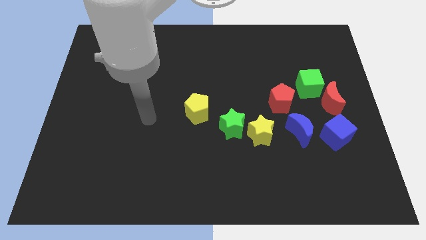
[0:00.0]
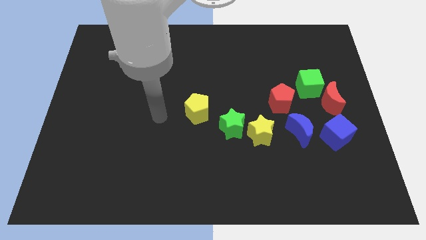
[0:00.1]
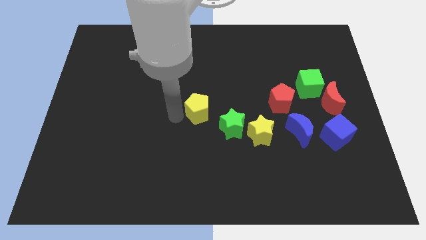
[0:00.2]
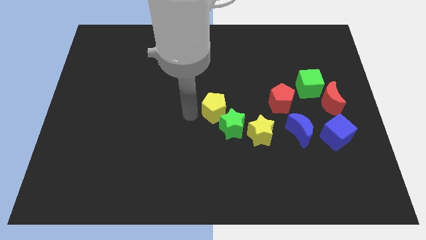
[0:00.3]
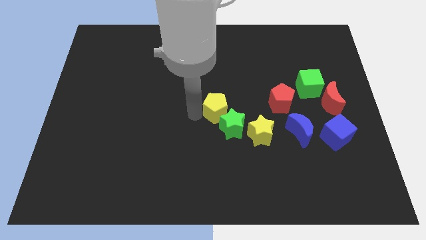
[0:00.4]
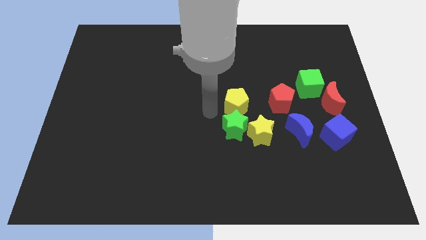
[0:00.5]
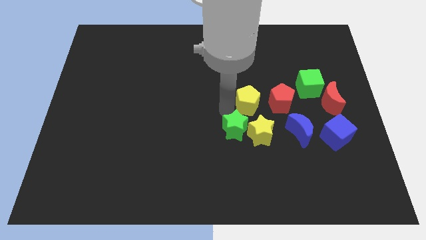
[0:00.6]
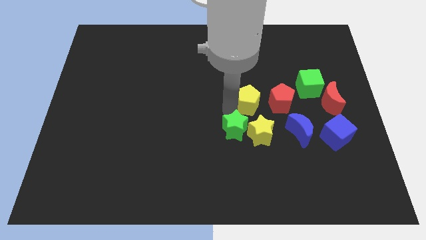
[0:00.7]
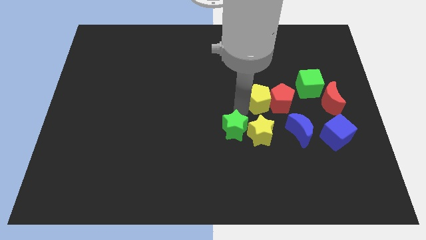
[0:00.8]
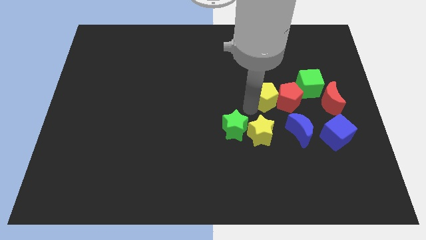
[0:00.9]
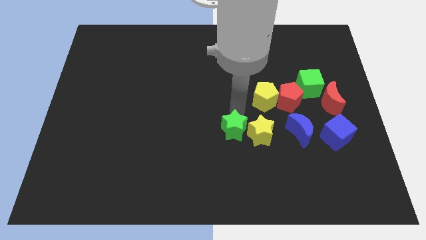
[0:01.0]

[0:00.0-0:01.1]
place the yellow pentagon into the red pentagon

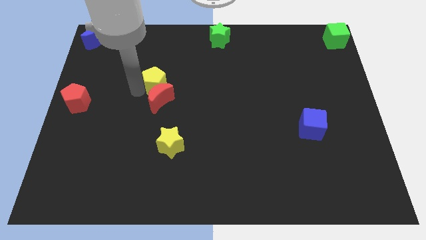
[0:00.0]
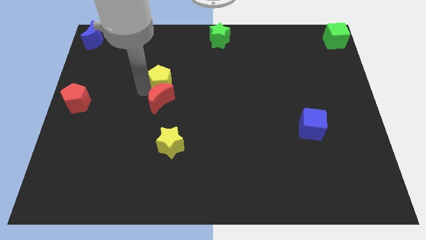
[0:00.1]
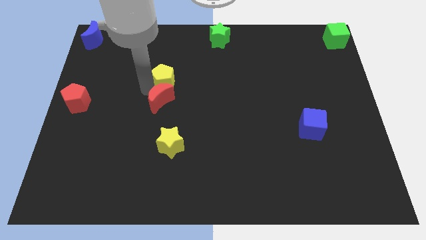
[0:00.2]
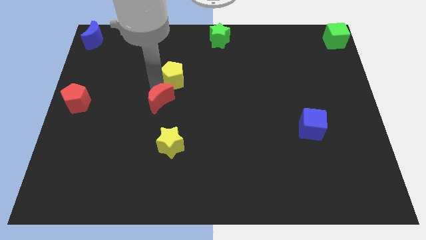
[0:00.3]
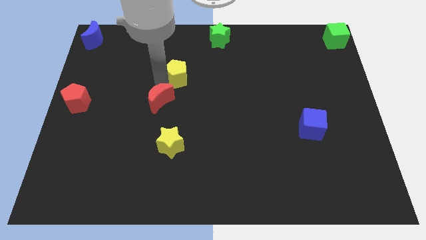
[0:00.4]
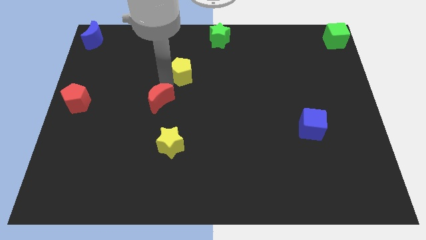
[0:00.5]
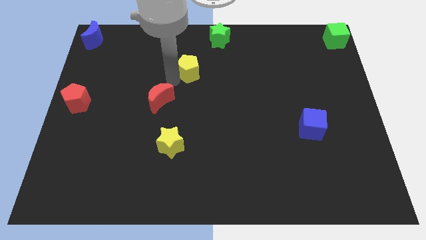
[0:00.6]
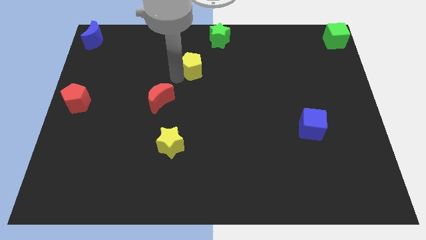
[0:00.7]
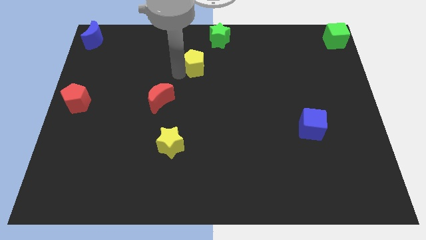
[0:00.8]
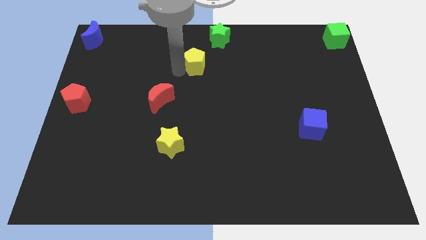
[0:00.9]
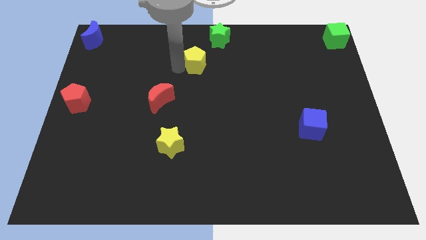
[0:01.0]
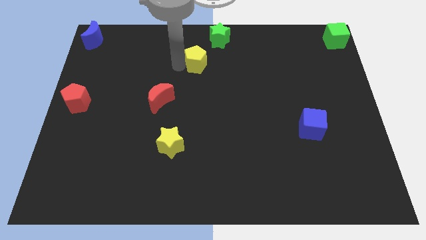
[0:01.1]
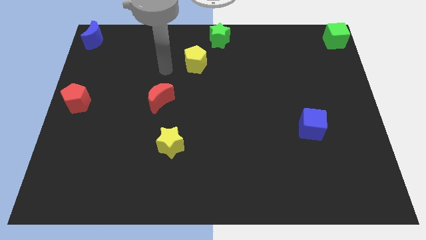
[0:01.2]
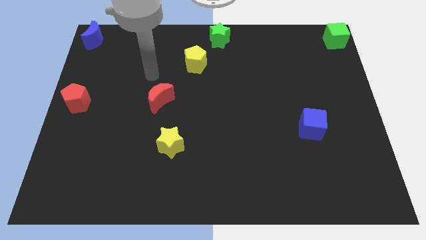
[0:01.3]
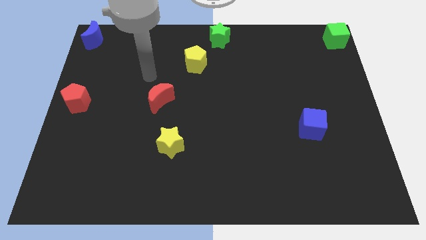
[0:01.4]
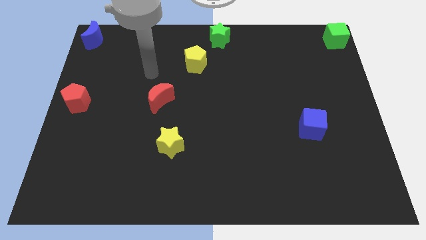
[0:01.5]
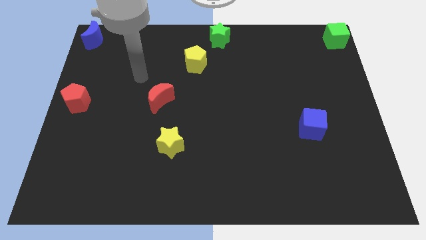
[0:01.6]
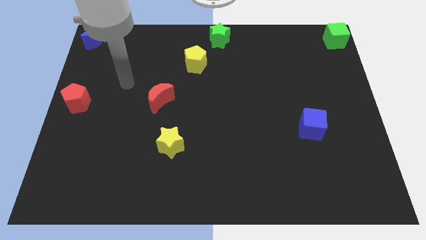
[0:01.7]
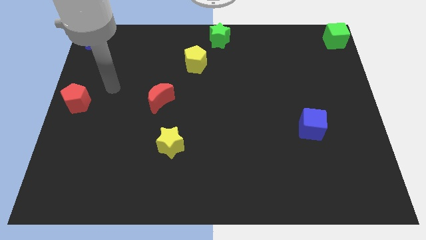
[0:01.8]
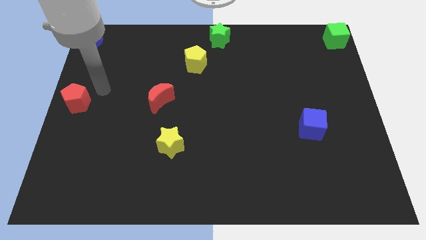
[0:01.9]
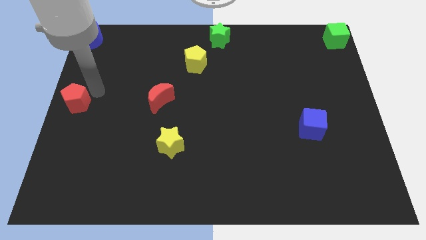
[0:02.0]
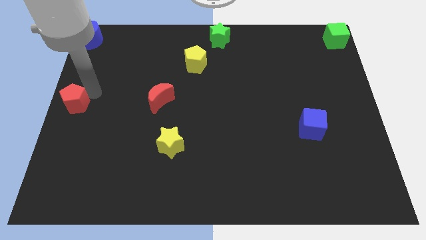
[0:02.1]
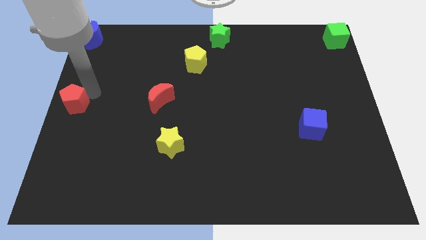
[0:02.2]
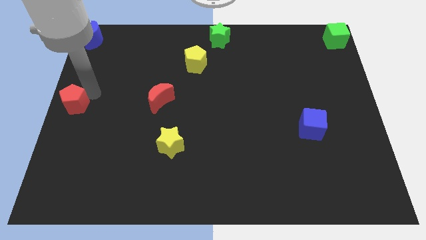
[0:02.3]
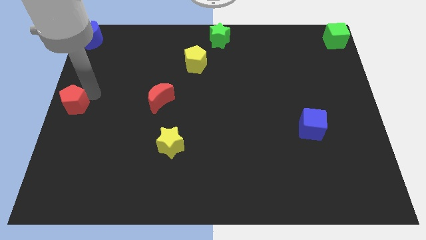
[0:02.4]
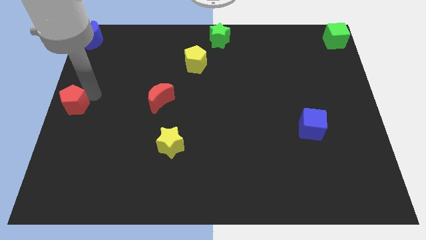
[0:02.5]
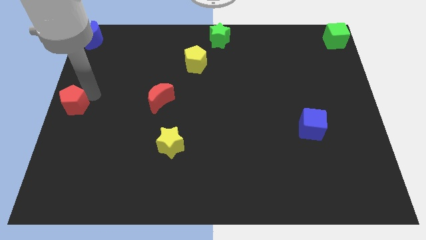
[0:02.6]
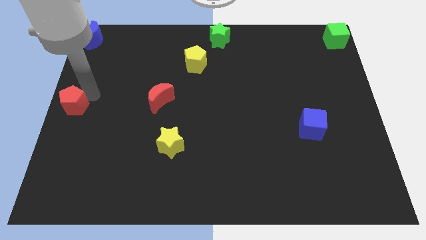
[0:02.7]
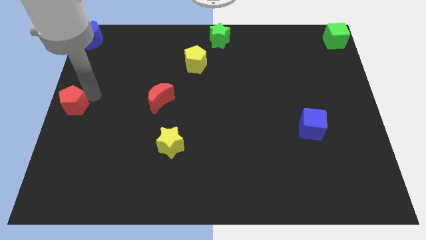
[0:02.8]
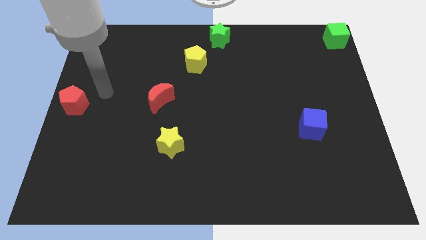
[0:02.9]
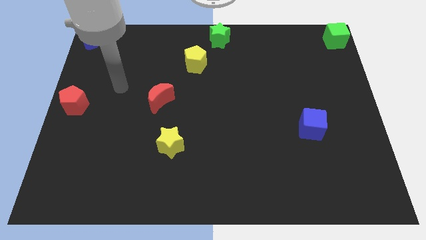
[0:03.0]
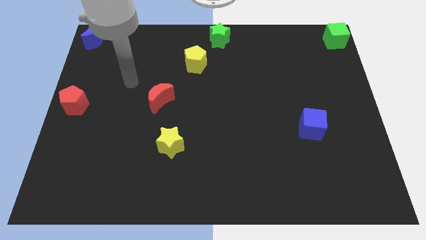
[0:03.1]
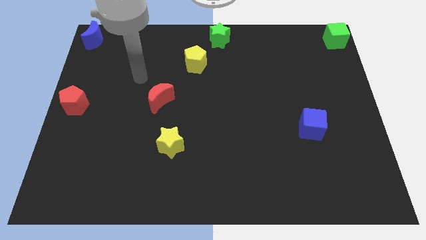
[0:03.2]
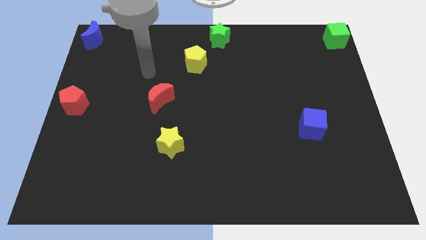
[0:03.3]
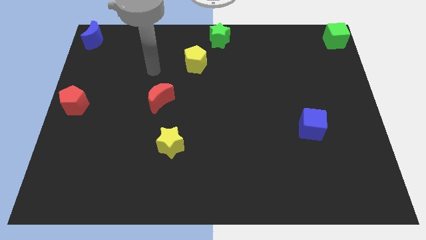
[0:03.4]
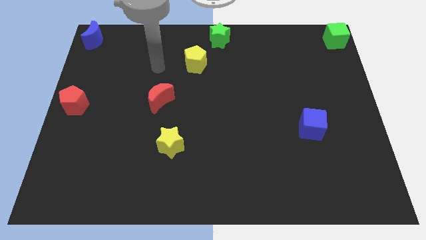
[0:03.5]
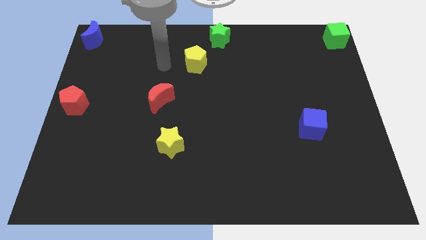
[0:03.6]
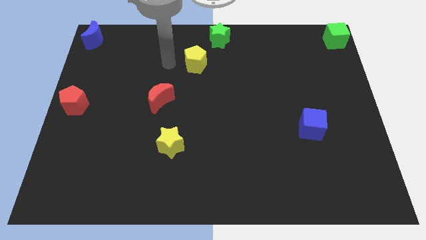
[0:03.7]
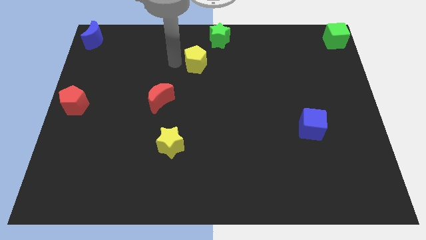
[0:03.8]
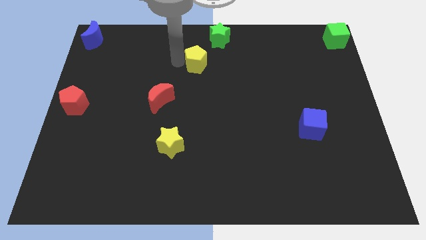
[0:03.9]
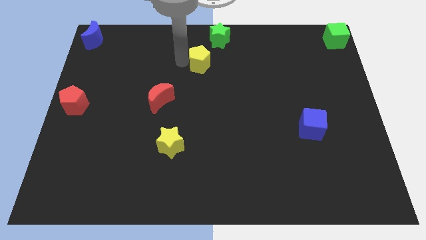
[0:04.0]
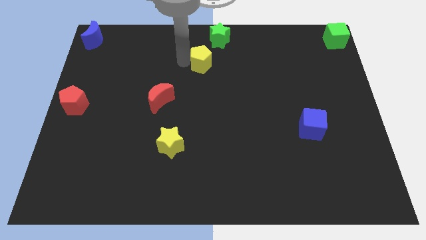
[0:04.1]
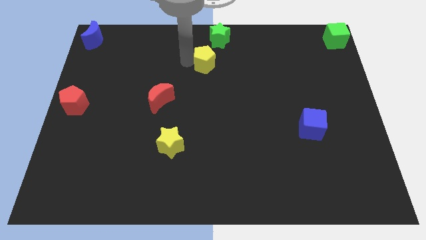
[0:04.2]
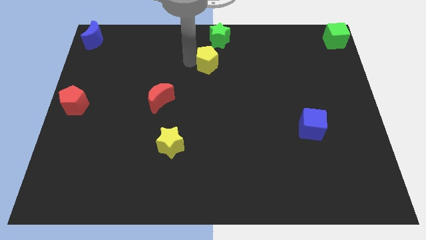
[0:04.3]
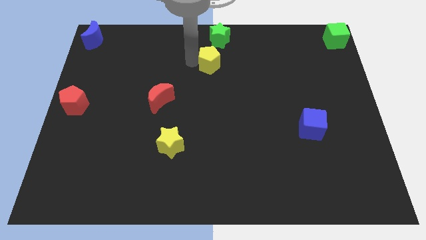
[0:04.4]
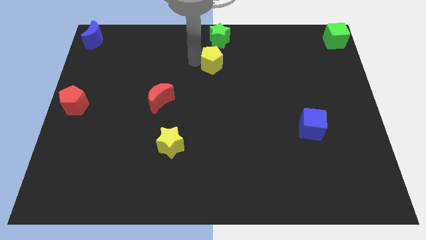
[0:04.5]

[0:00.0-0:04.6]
place yellow pentagon below green star

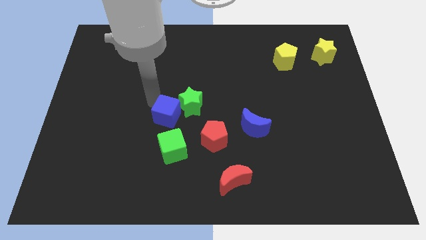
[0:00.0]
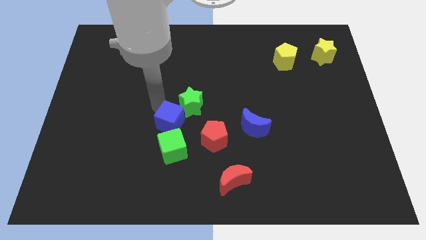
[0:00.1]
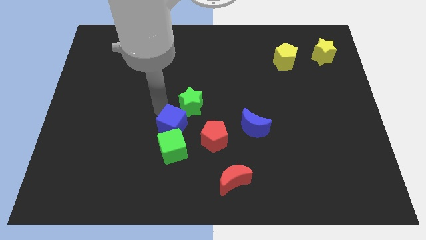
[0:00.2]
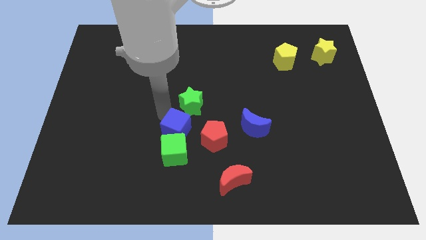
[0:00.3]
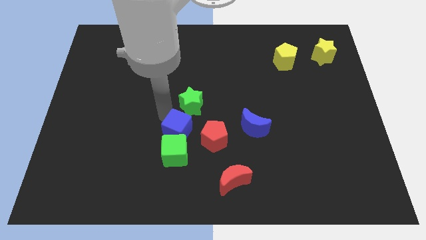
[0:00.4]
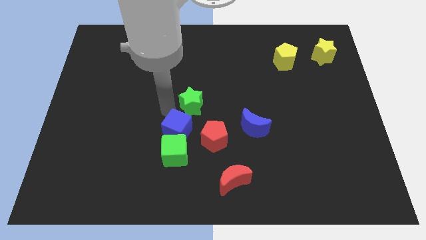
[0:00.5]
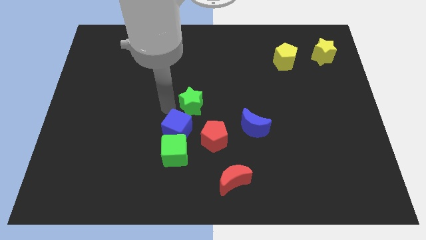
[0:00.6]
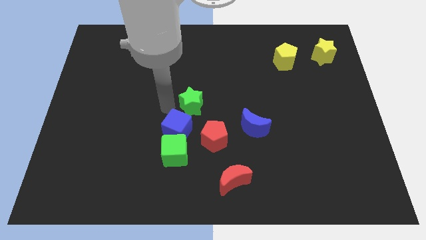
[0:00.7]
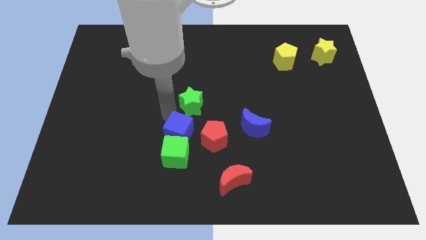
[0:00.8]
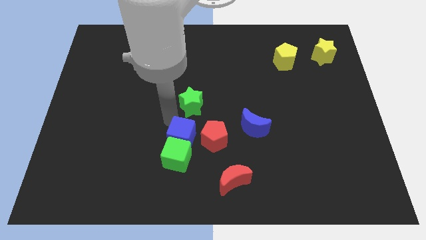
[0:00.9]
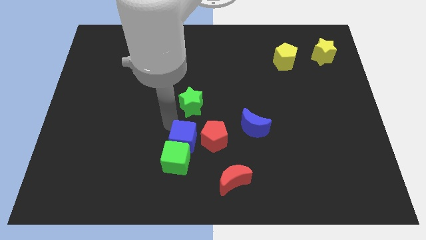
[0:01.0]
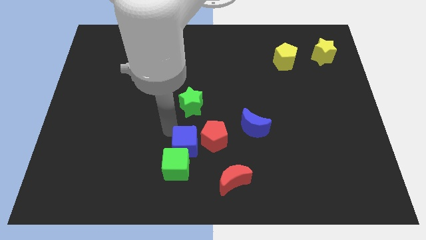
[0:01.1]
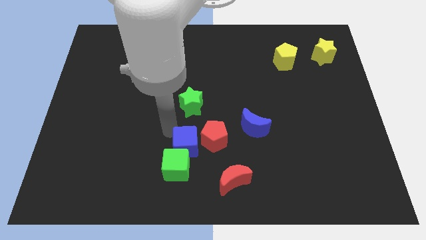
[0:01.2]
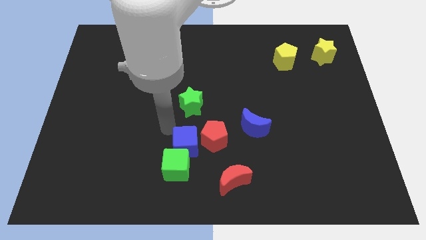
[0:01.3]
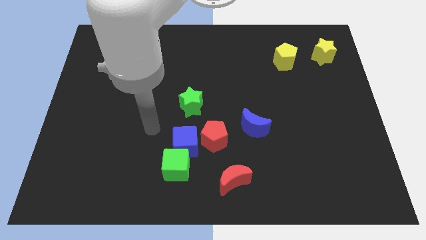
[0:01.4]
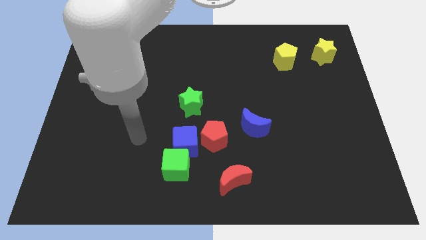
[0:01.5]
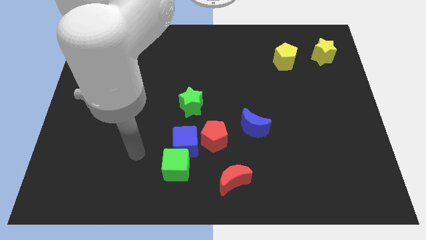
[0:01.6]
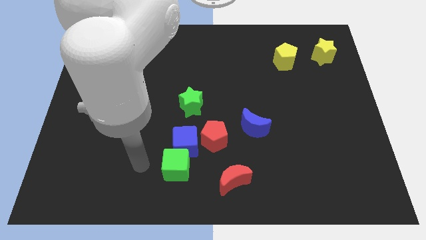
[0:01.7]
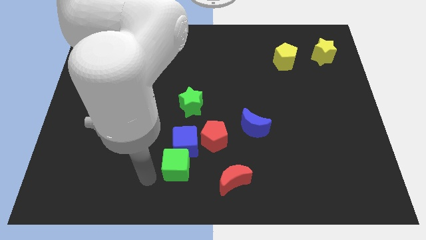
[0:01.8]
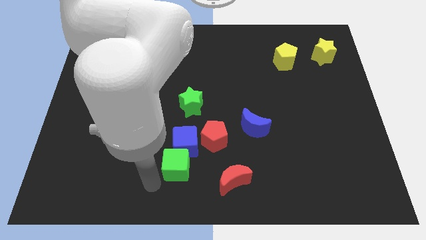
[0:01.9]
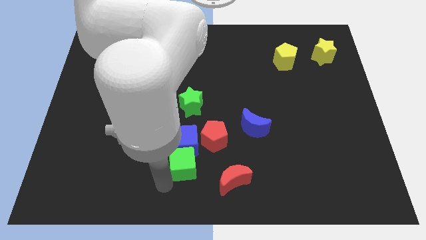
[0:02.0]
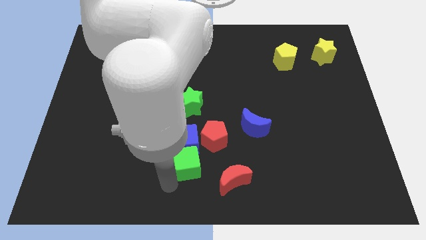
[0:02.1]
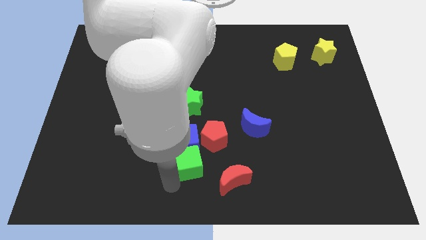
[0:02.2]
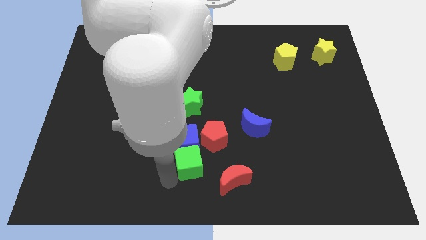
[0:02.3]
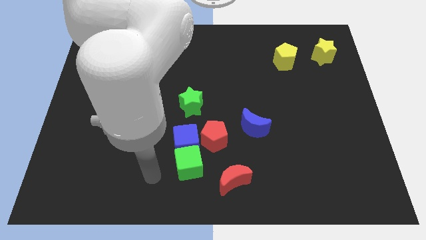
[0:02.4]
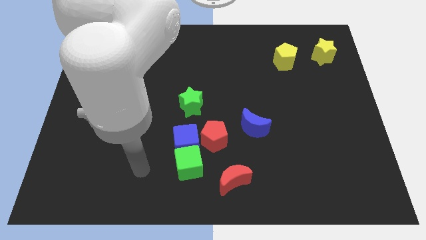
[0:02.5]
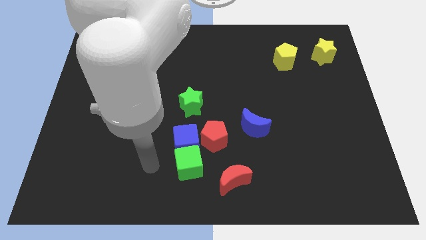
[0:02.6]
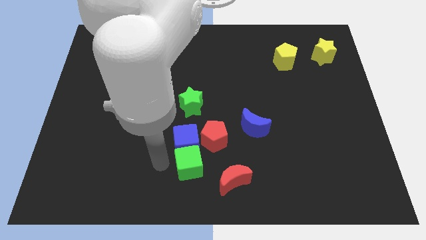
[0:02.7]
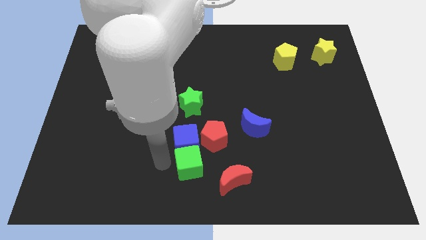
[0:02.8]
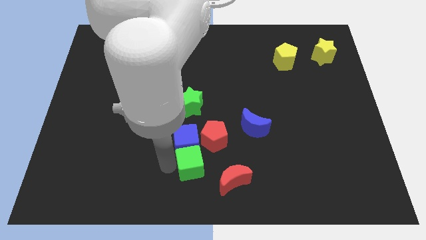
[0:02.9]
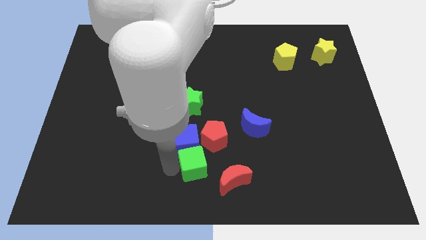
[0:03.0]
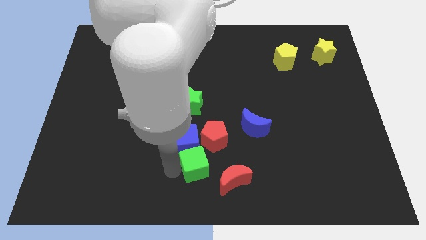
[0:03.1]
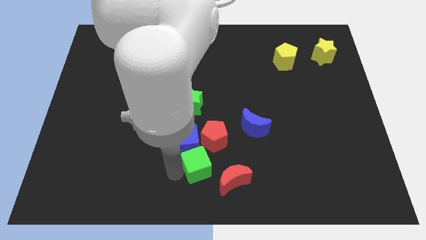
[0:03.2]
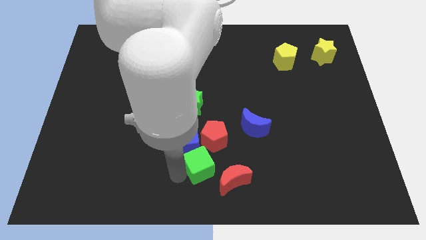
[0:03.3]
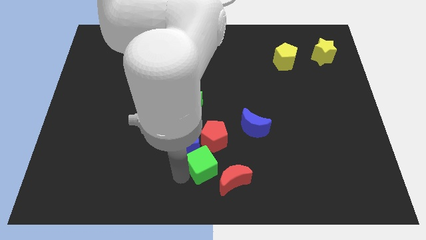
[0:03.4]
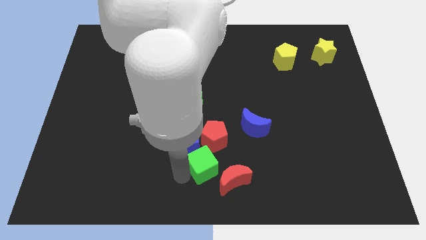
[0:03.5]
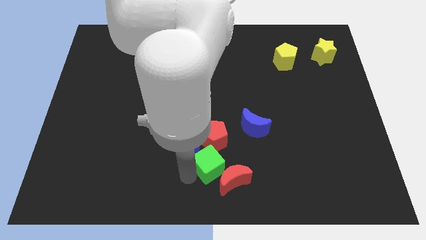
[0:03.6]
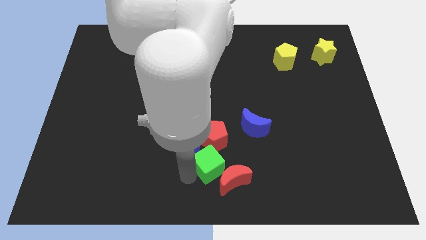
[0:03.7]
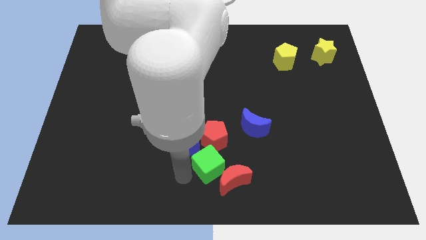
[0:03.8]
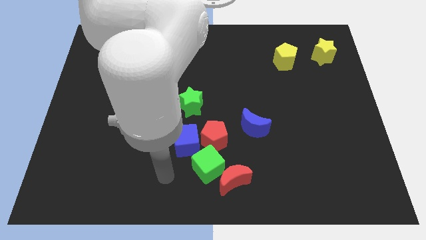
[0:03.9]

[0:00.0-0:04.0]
group up the blue cube green cube and the red blocks
